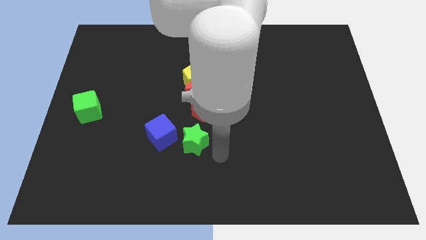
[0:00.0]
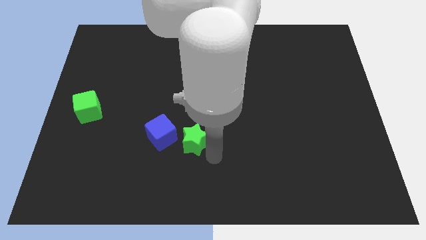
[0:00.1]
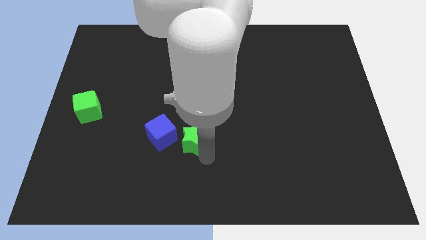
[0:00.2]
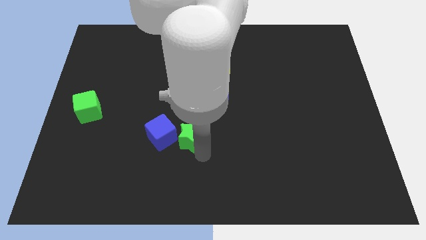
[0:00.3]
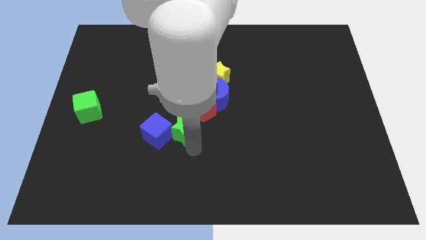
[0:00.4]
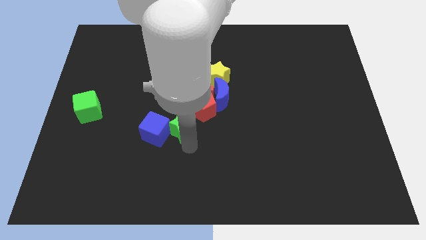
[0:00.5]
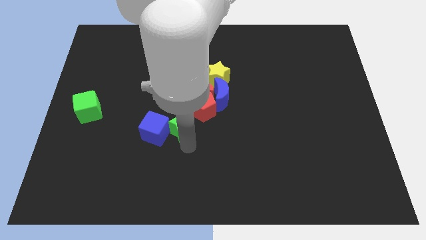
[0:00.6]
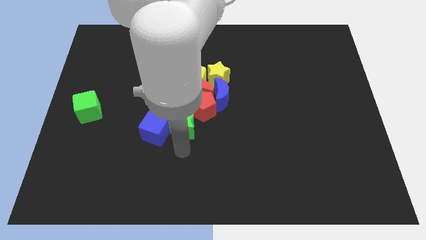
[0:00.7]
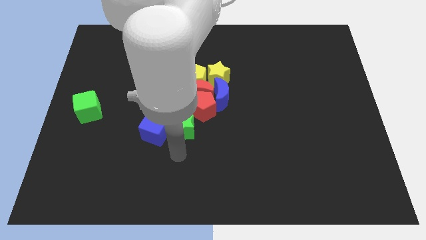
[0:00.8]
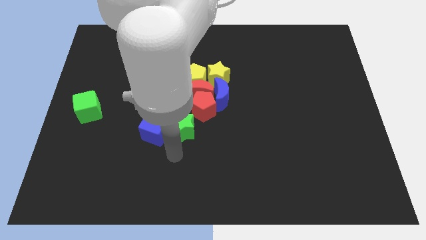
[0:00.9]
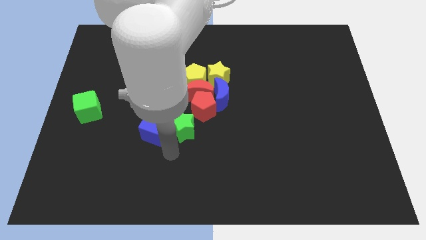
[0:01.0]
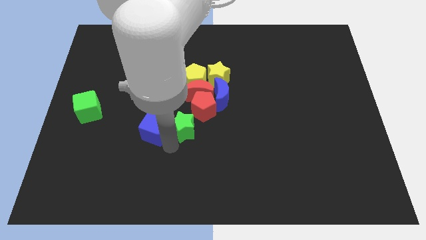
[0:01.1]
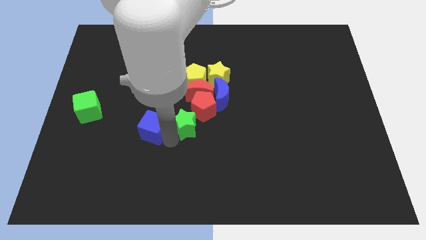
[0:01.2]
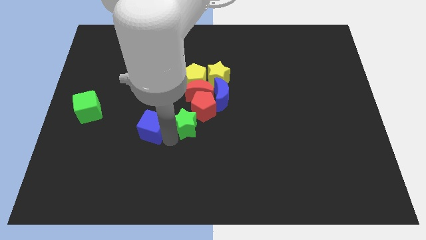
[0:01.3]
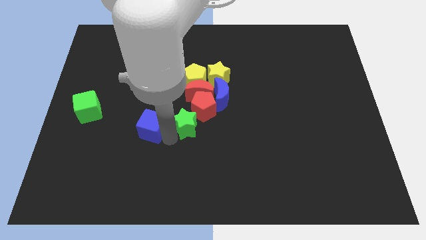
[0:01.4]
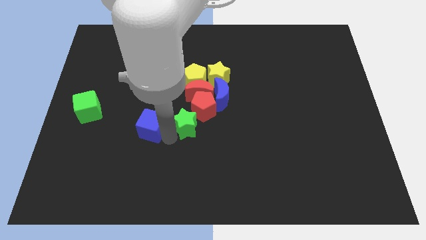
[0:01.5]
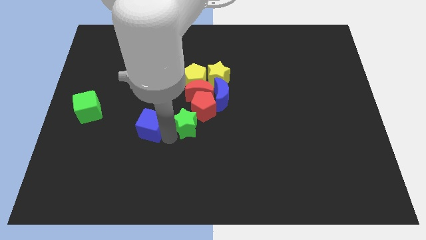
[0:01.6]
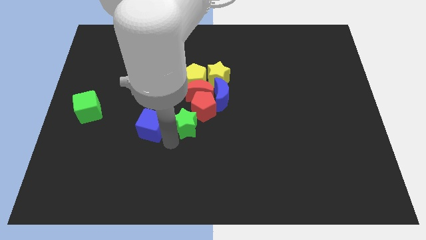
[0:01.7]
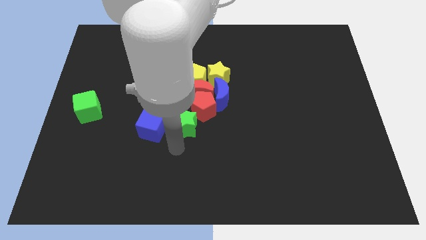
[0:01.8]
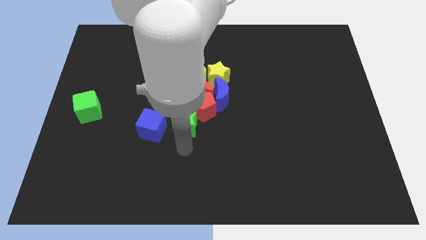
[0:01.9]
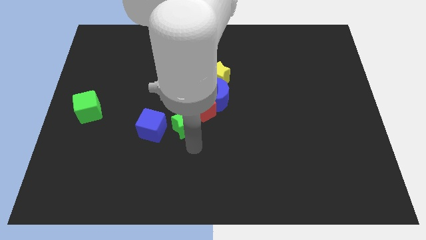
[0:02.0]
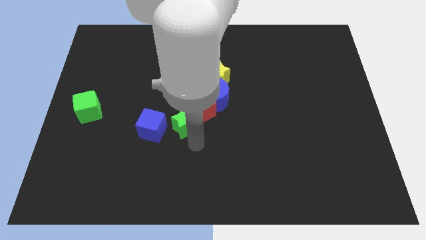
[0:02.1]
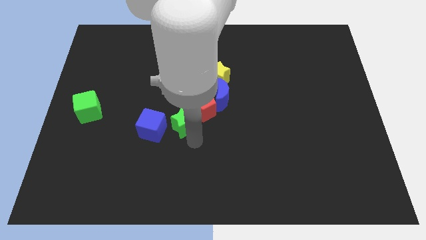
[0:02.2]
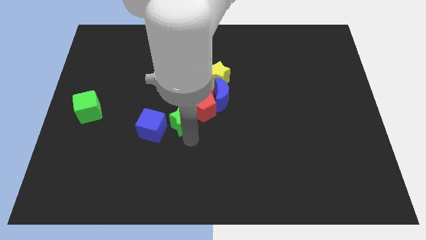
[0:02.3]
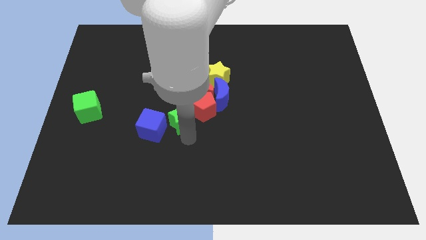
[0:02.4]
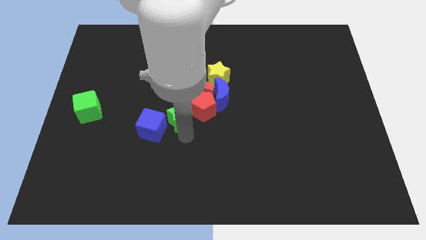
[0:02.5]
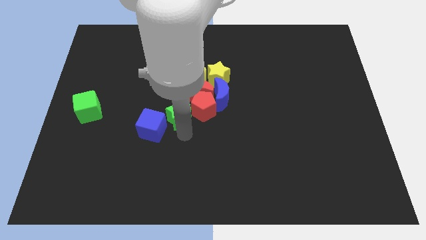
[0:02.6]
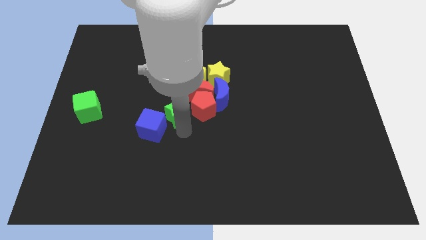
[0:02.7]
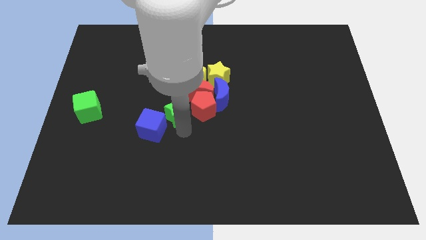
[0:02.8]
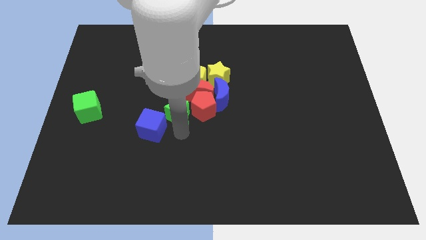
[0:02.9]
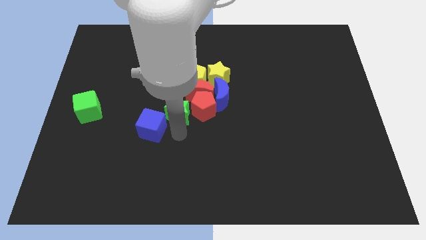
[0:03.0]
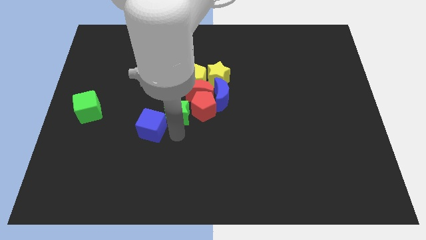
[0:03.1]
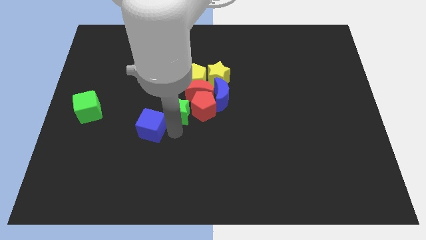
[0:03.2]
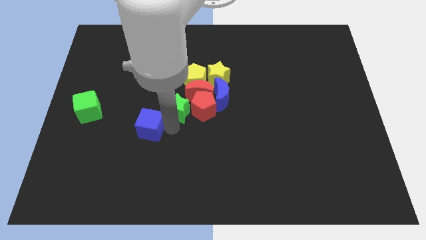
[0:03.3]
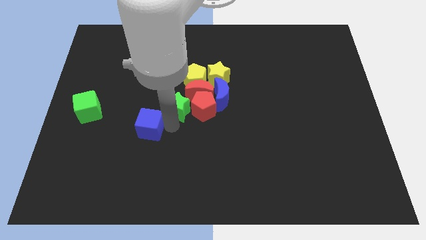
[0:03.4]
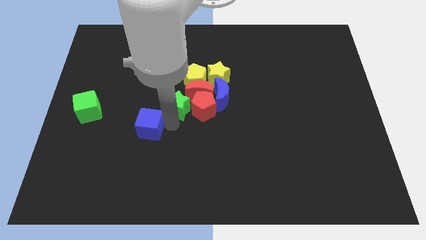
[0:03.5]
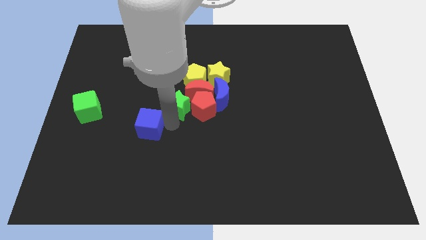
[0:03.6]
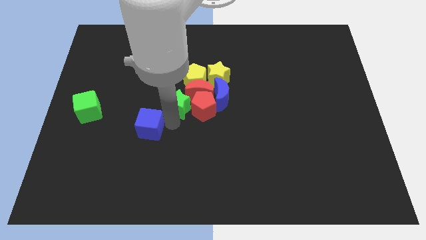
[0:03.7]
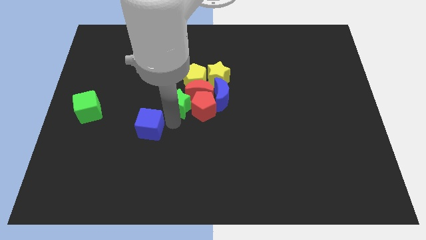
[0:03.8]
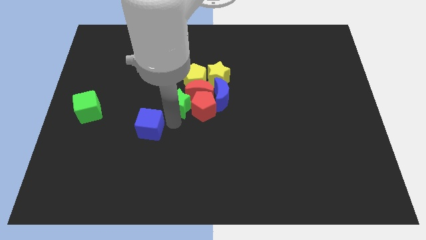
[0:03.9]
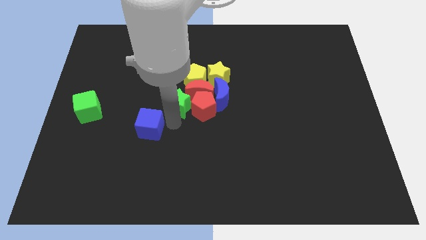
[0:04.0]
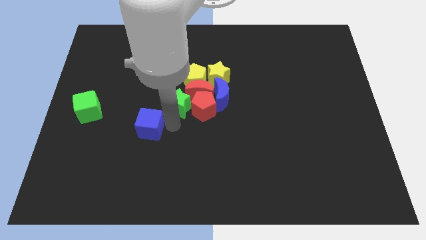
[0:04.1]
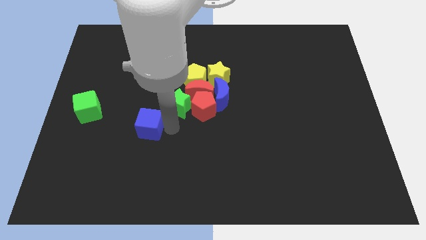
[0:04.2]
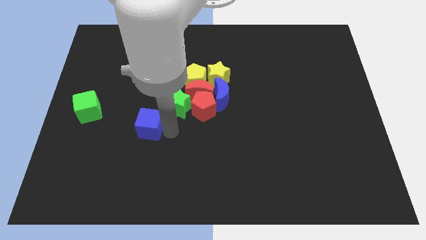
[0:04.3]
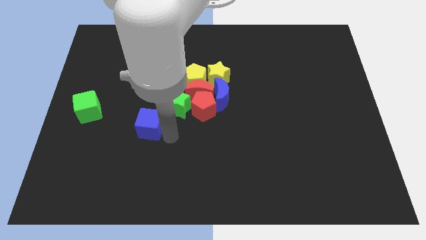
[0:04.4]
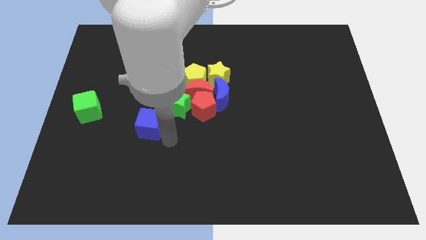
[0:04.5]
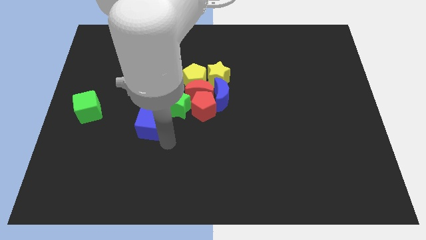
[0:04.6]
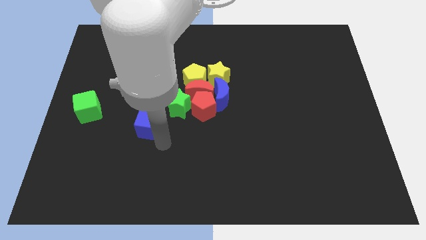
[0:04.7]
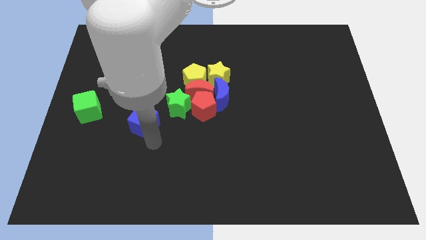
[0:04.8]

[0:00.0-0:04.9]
move the green star to the left side of the red pentagon

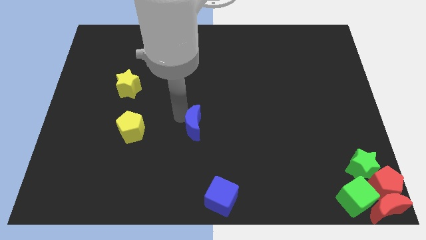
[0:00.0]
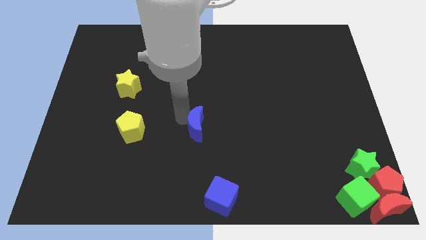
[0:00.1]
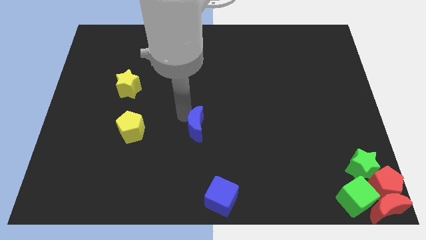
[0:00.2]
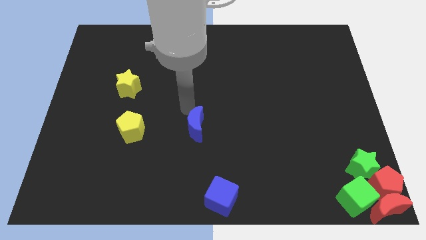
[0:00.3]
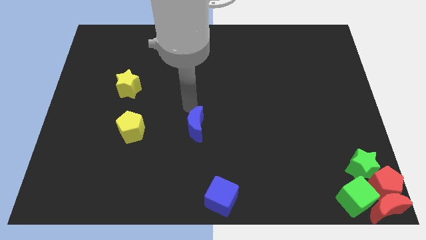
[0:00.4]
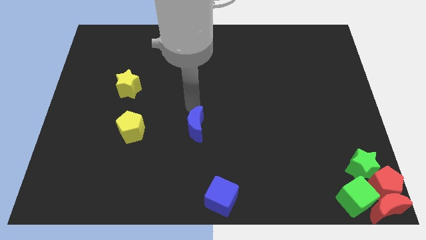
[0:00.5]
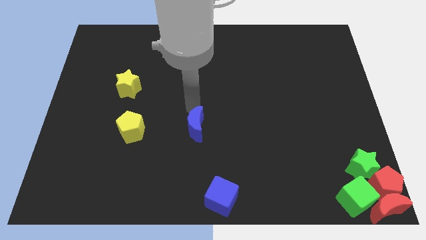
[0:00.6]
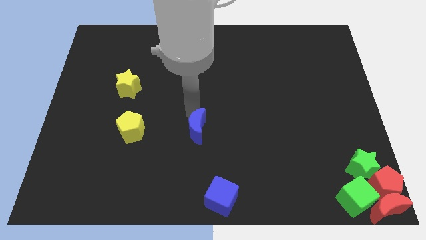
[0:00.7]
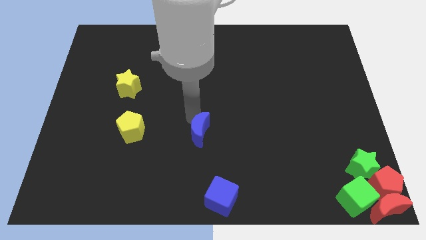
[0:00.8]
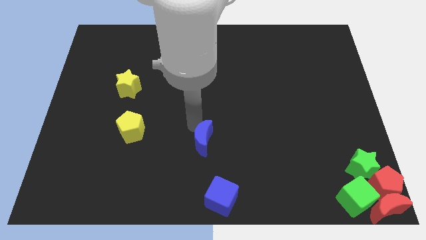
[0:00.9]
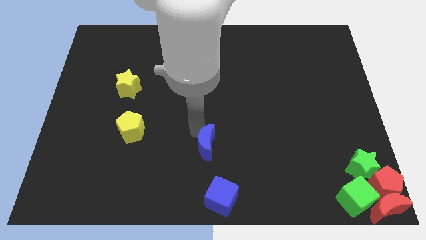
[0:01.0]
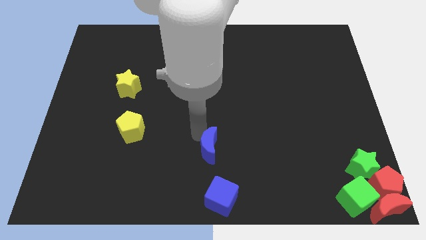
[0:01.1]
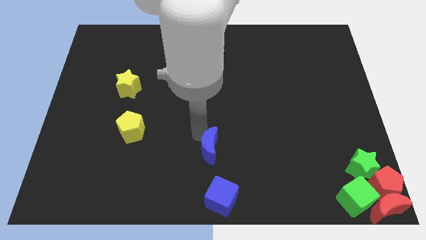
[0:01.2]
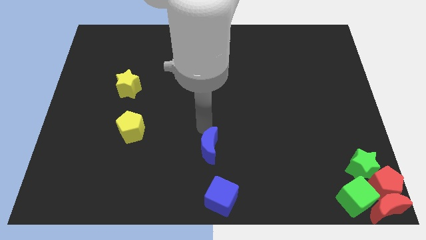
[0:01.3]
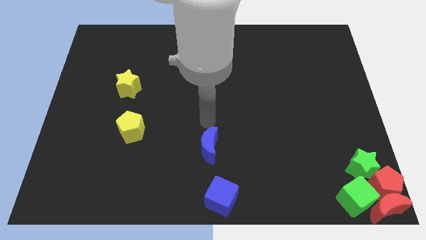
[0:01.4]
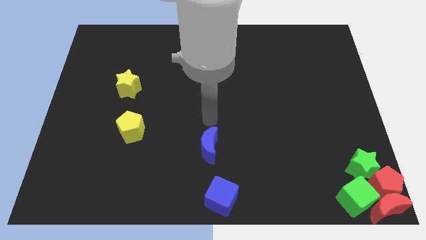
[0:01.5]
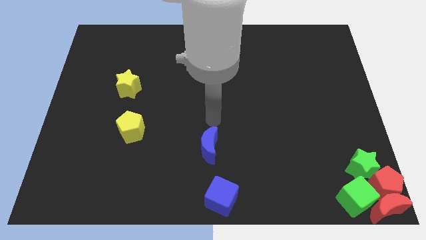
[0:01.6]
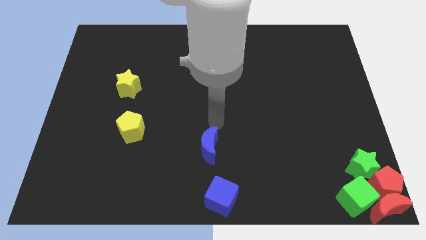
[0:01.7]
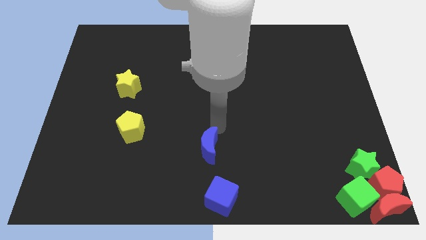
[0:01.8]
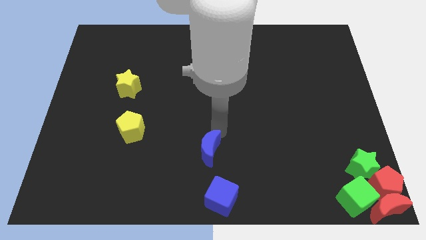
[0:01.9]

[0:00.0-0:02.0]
put the blue crescent on the top of the blue cube

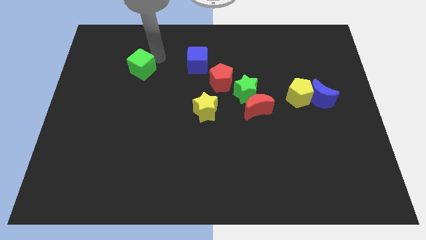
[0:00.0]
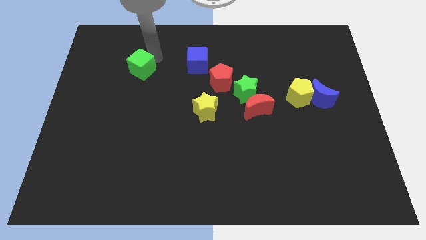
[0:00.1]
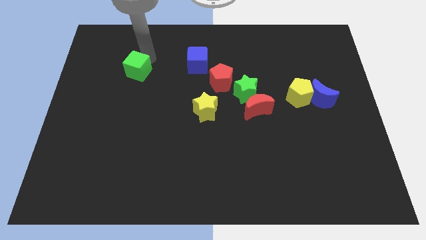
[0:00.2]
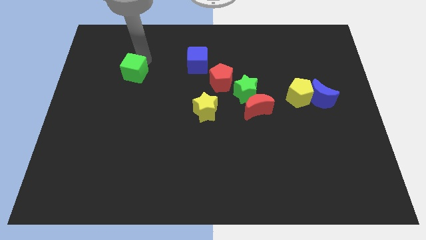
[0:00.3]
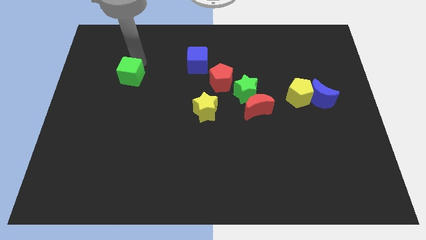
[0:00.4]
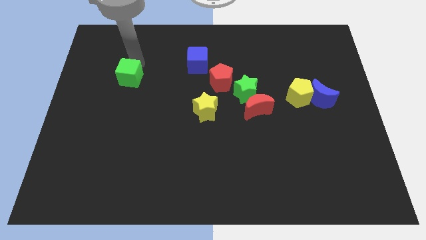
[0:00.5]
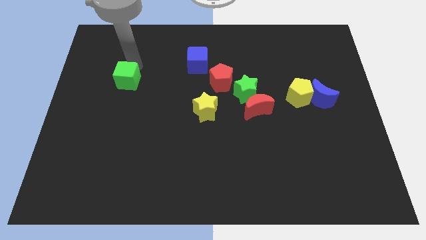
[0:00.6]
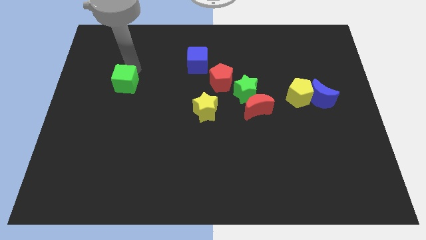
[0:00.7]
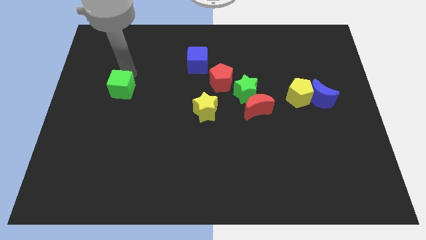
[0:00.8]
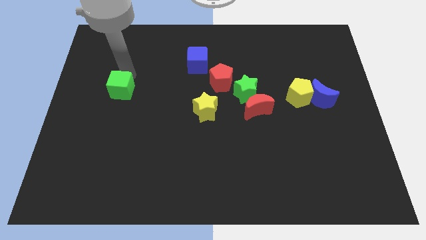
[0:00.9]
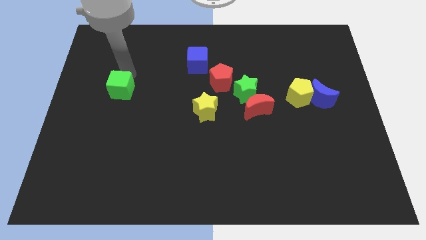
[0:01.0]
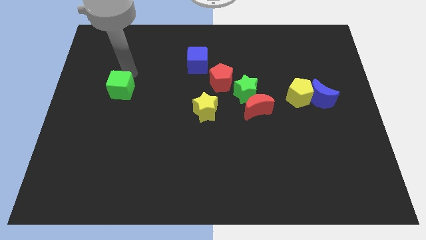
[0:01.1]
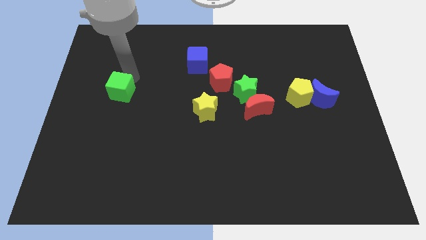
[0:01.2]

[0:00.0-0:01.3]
move the green cube to the bottom of the board

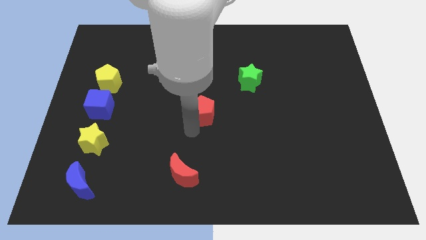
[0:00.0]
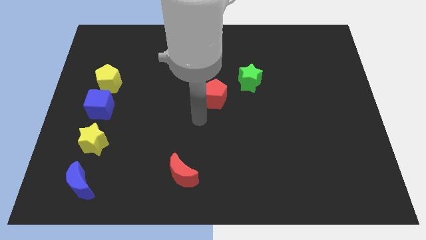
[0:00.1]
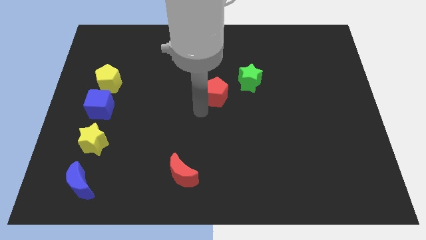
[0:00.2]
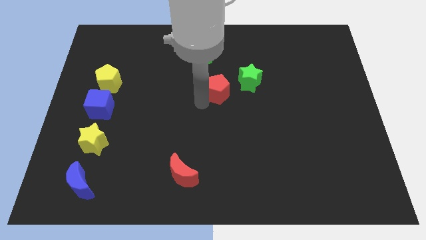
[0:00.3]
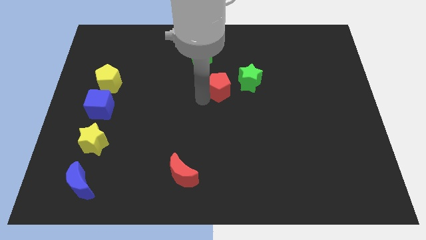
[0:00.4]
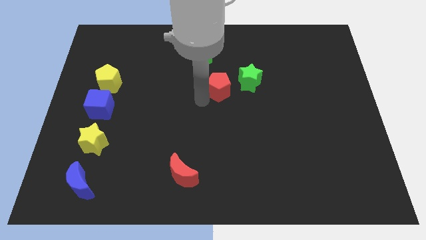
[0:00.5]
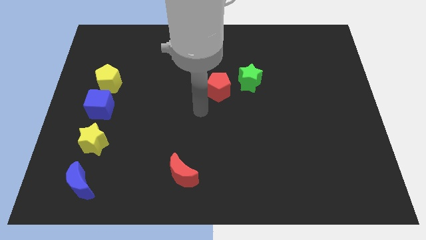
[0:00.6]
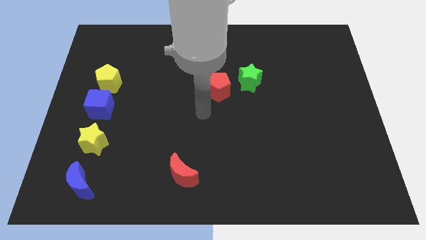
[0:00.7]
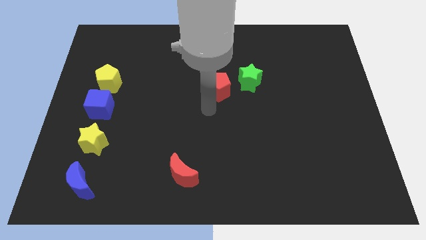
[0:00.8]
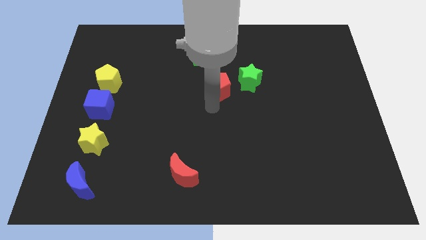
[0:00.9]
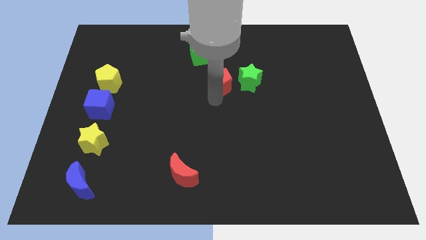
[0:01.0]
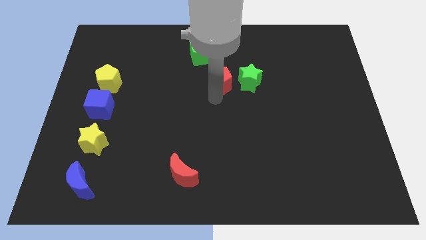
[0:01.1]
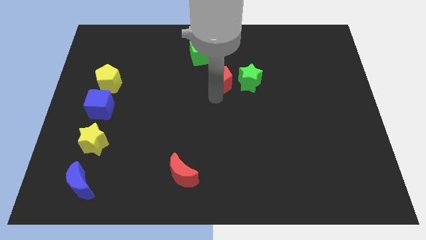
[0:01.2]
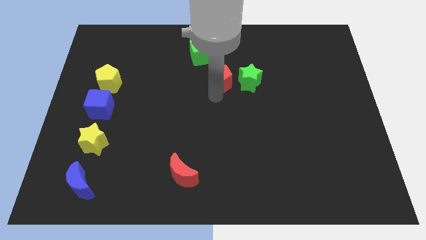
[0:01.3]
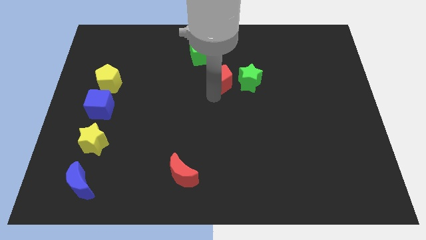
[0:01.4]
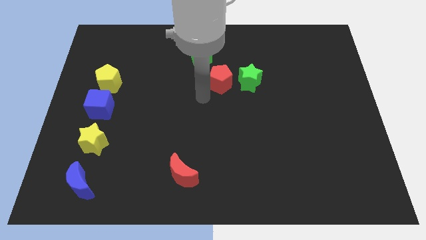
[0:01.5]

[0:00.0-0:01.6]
place the red pentagon left to green star
